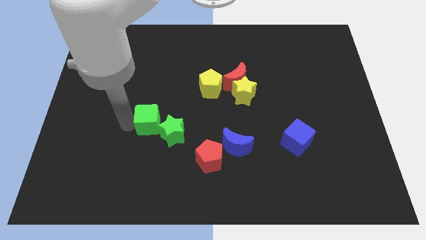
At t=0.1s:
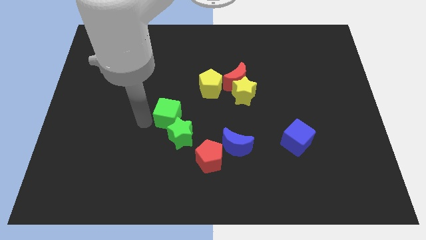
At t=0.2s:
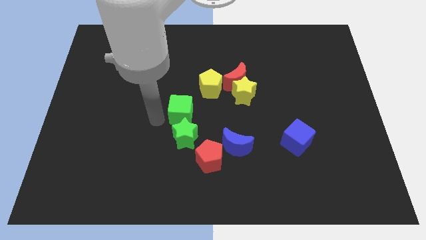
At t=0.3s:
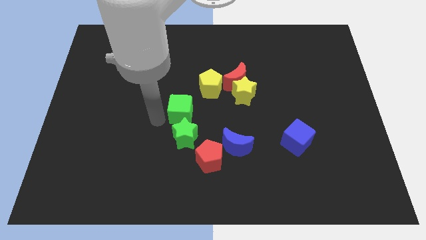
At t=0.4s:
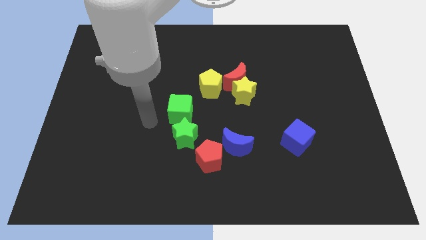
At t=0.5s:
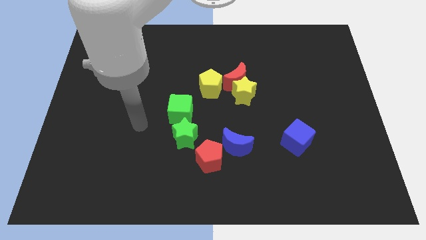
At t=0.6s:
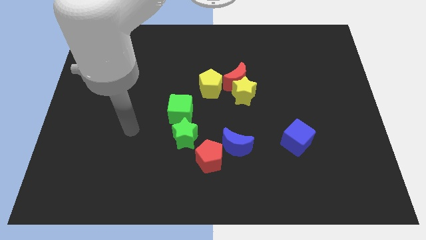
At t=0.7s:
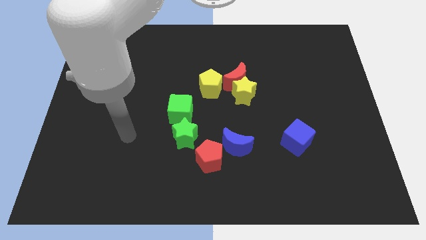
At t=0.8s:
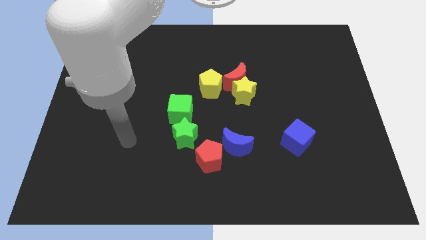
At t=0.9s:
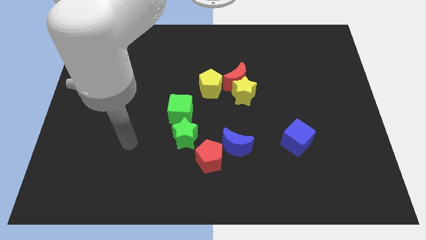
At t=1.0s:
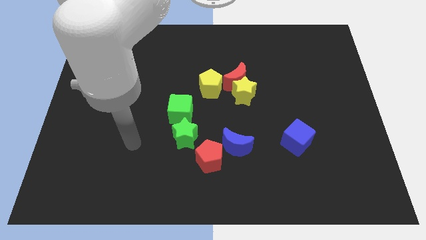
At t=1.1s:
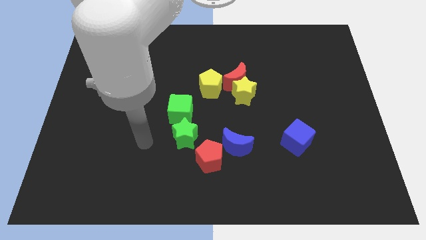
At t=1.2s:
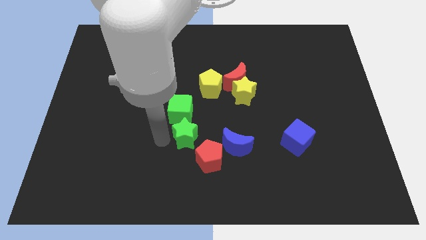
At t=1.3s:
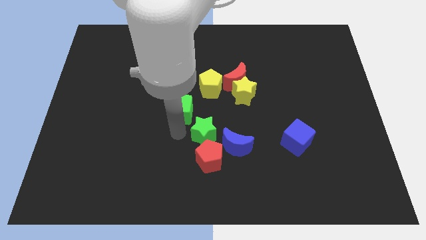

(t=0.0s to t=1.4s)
move the green cube to the top of the green star

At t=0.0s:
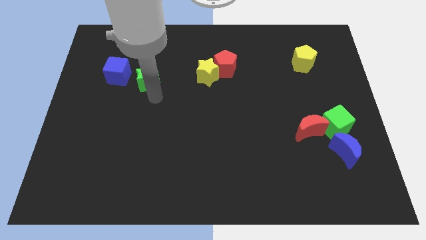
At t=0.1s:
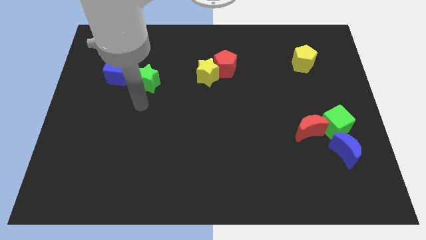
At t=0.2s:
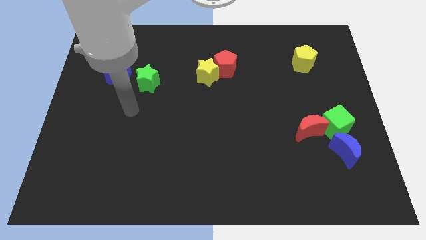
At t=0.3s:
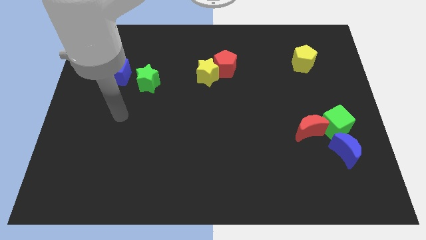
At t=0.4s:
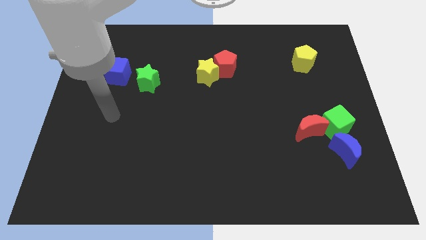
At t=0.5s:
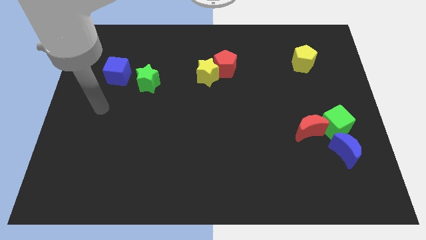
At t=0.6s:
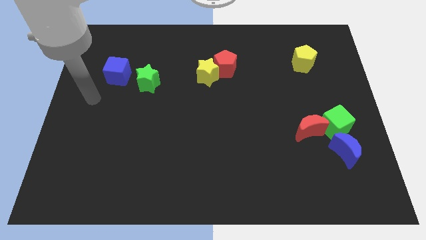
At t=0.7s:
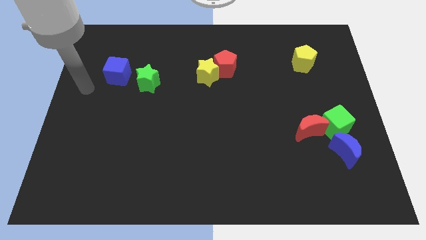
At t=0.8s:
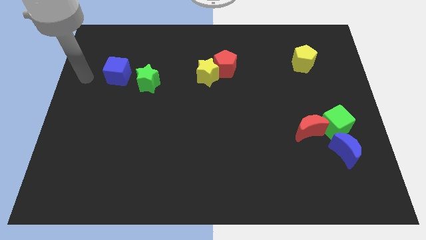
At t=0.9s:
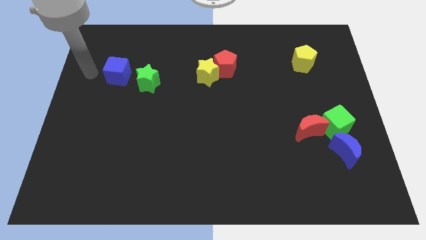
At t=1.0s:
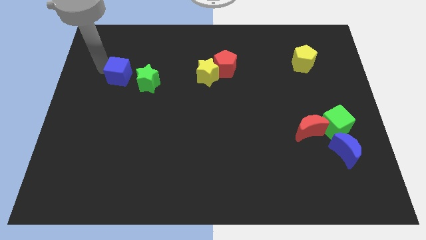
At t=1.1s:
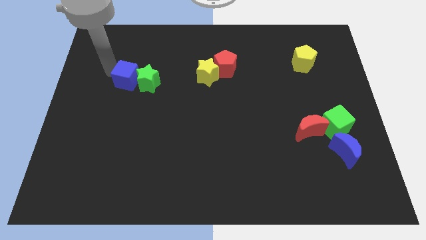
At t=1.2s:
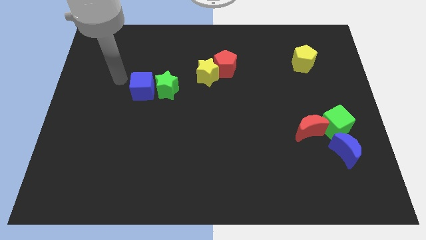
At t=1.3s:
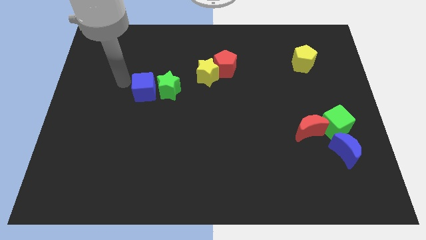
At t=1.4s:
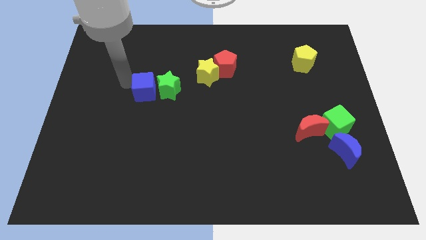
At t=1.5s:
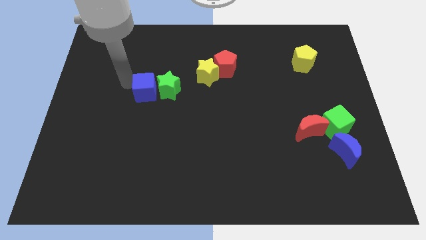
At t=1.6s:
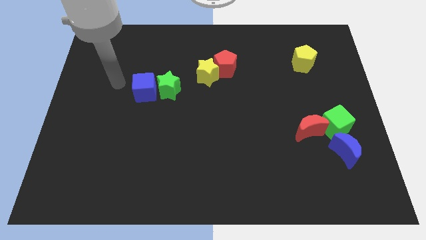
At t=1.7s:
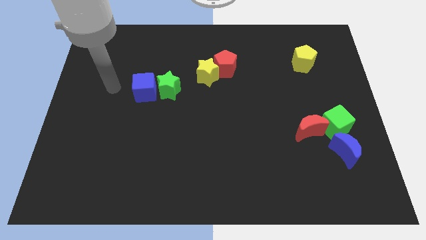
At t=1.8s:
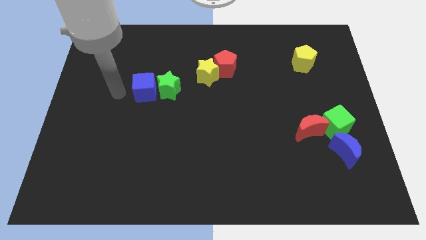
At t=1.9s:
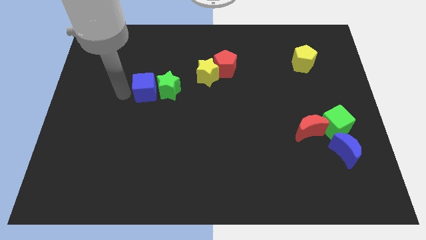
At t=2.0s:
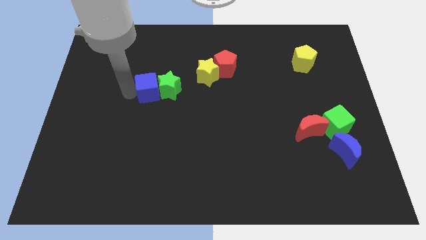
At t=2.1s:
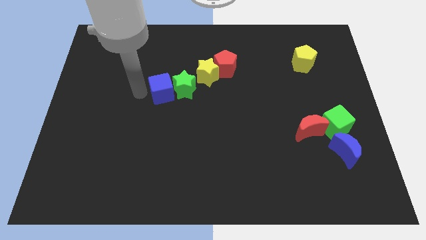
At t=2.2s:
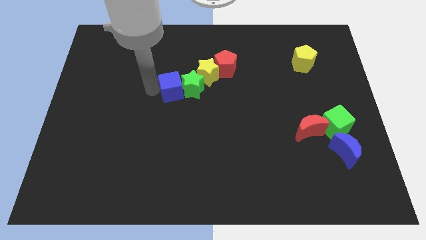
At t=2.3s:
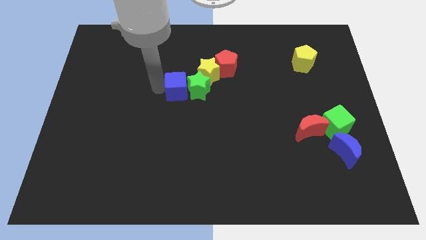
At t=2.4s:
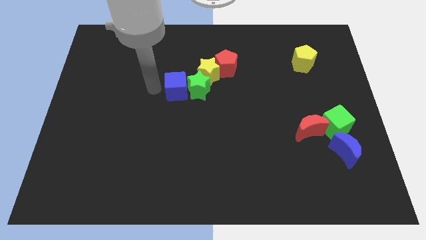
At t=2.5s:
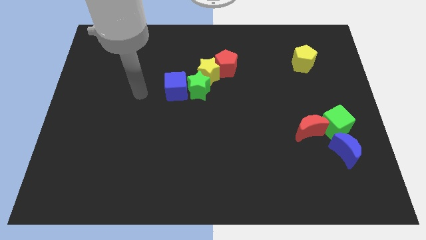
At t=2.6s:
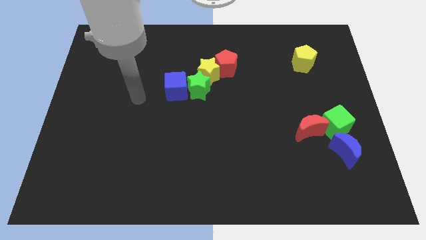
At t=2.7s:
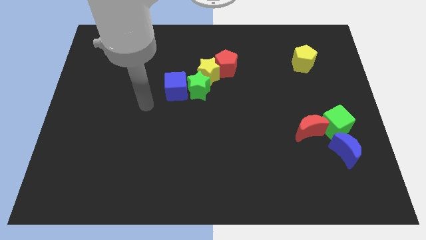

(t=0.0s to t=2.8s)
move the blue cube to the left of the green star

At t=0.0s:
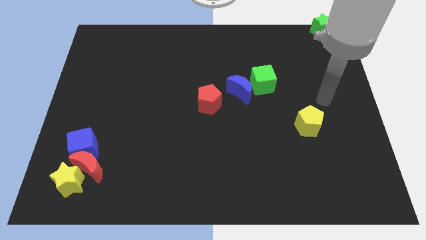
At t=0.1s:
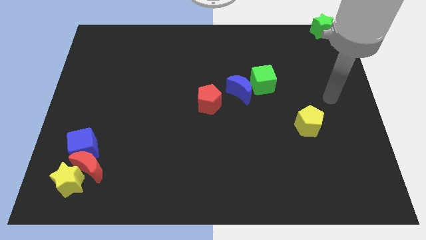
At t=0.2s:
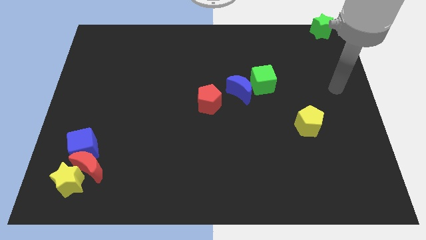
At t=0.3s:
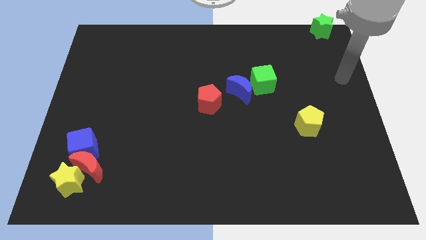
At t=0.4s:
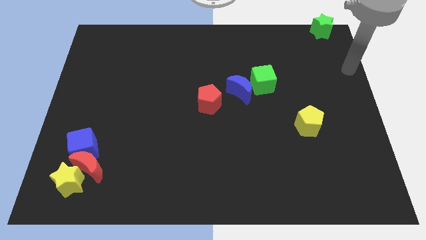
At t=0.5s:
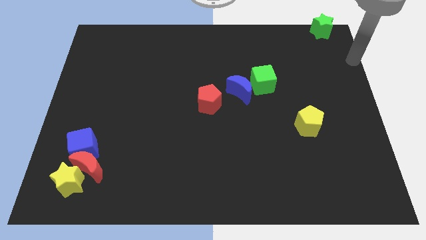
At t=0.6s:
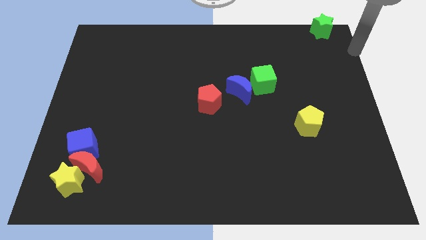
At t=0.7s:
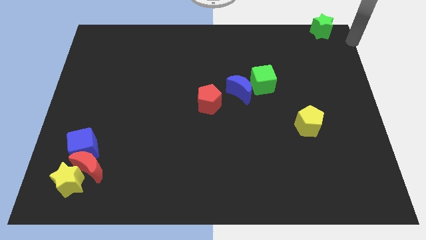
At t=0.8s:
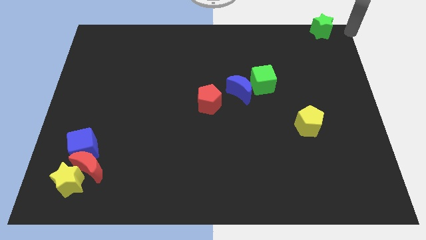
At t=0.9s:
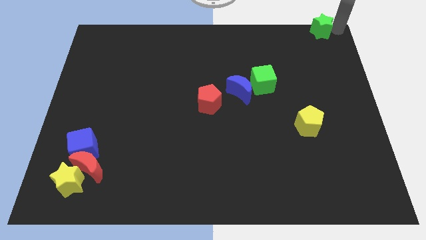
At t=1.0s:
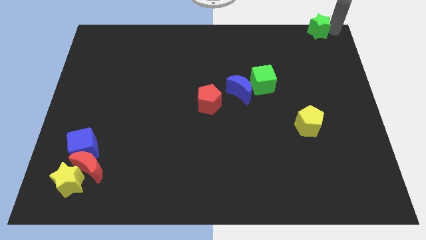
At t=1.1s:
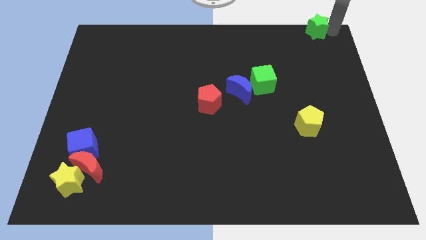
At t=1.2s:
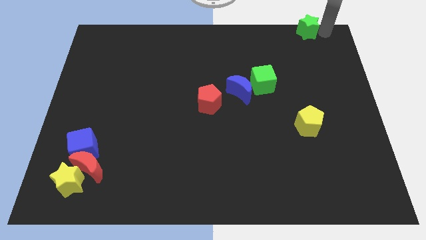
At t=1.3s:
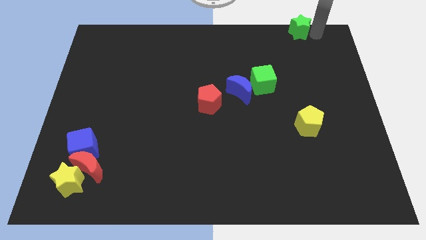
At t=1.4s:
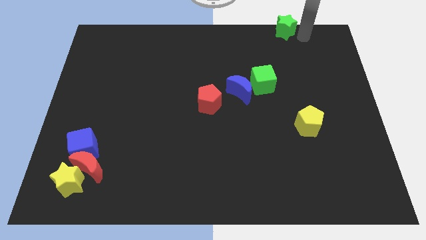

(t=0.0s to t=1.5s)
push the green star slightly to the left

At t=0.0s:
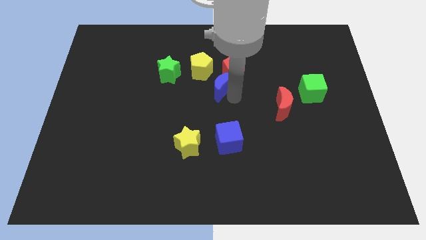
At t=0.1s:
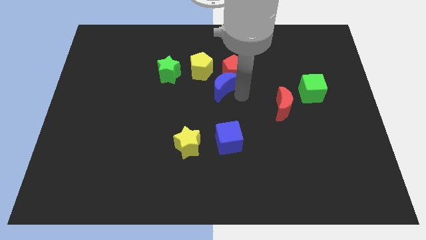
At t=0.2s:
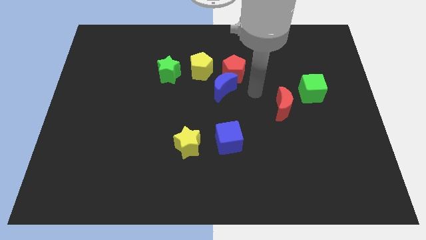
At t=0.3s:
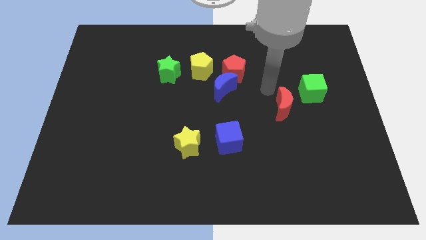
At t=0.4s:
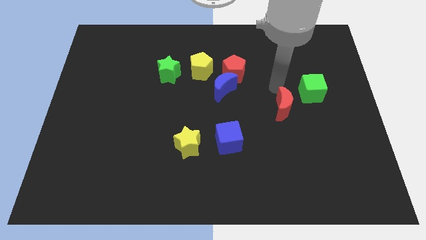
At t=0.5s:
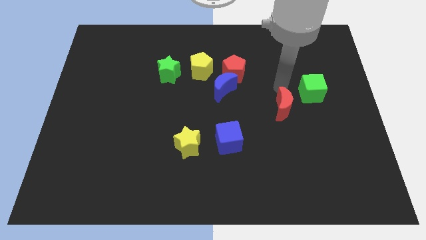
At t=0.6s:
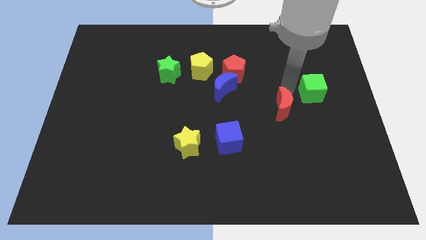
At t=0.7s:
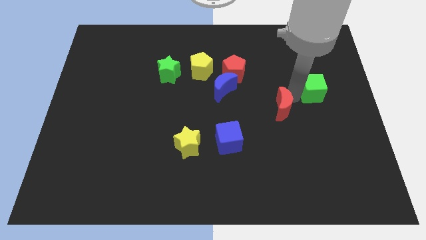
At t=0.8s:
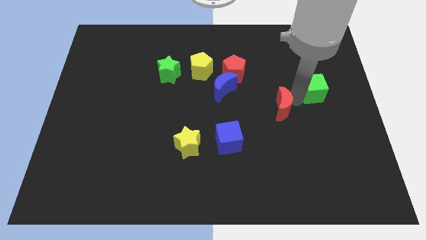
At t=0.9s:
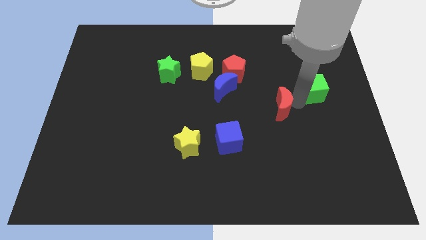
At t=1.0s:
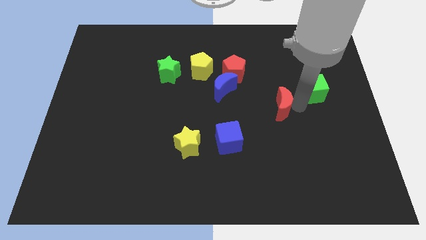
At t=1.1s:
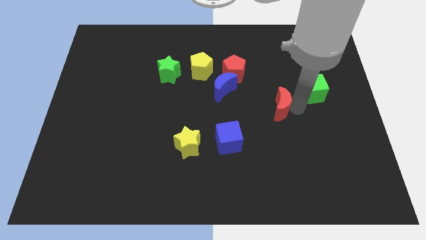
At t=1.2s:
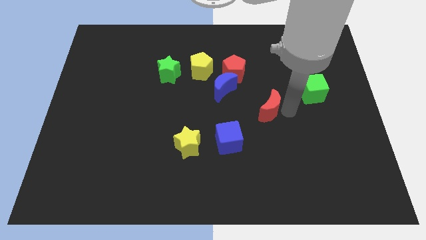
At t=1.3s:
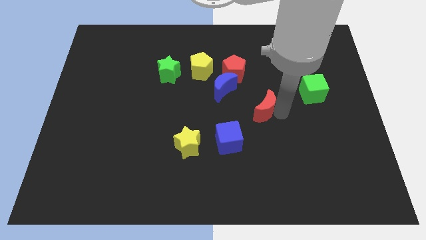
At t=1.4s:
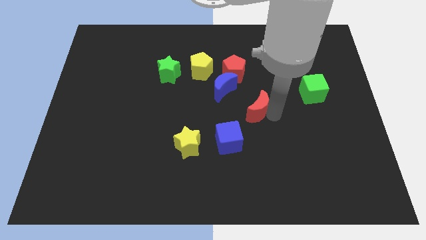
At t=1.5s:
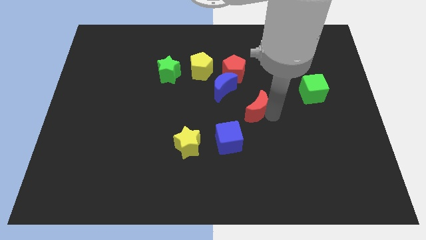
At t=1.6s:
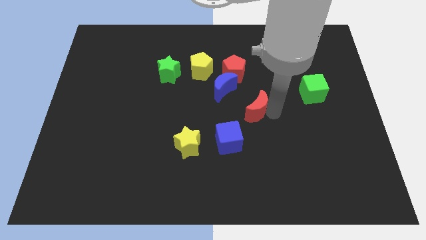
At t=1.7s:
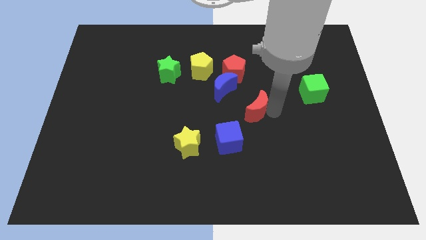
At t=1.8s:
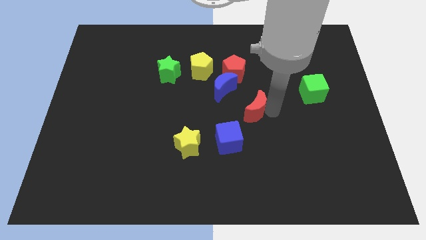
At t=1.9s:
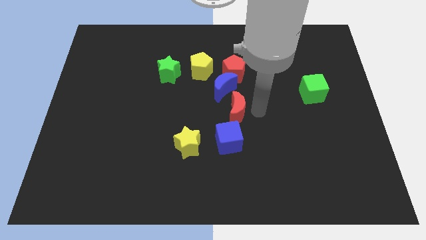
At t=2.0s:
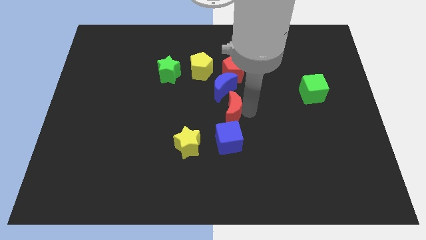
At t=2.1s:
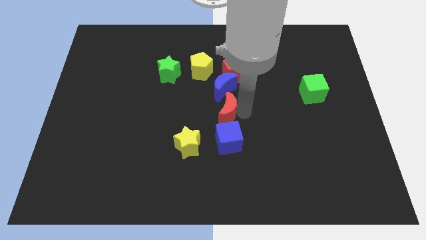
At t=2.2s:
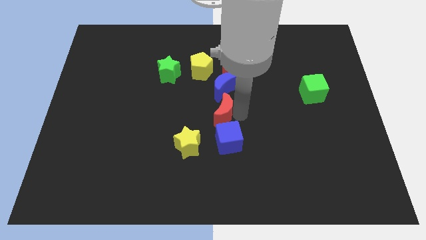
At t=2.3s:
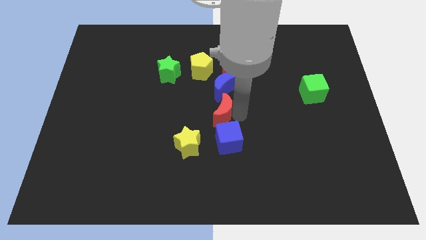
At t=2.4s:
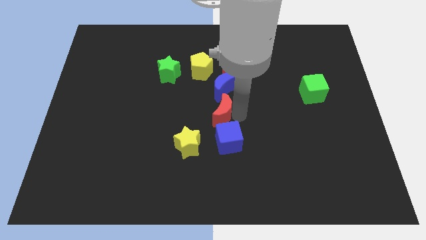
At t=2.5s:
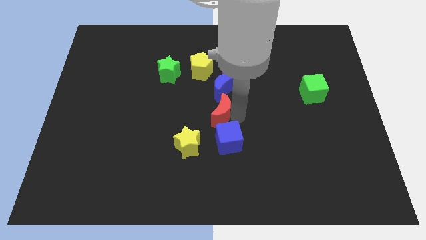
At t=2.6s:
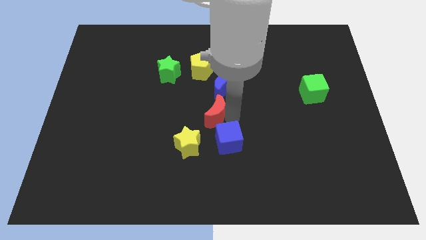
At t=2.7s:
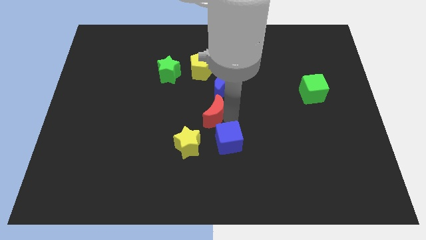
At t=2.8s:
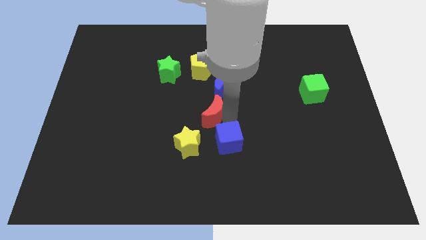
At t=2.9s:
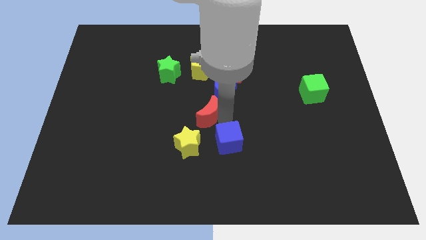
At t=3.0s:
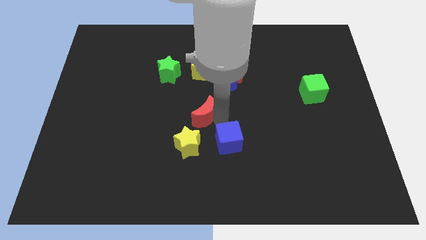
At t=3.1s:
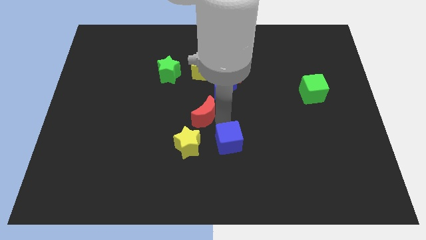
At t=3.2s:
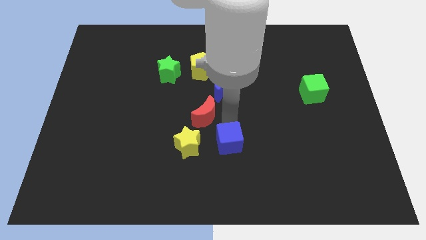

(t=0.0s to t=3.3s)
move the red moon diagonal above the yellow star
